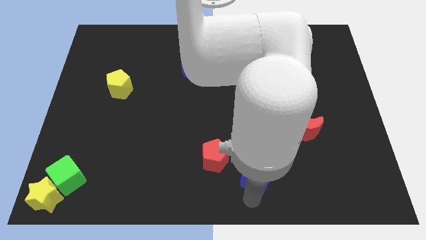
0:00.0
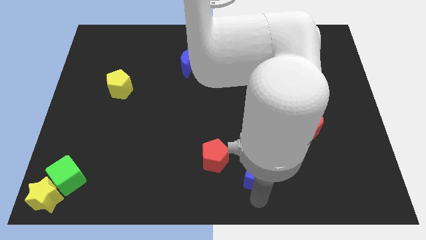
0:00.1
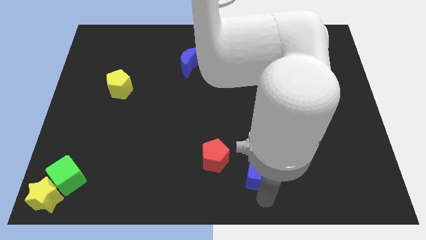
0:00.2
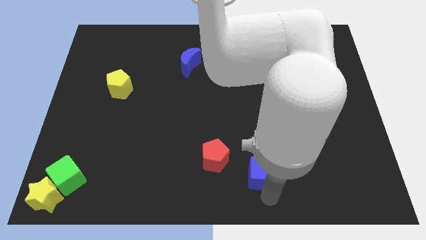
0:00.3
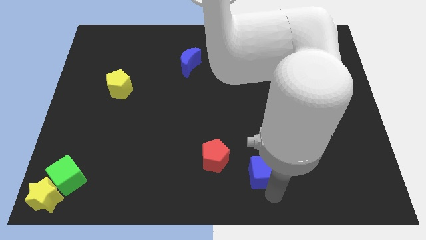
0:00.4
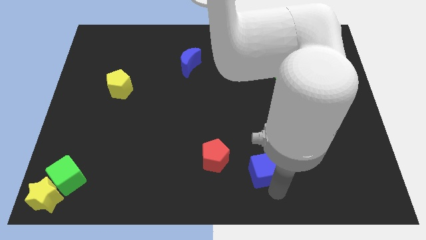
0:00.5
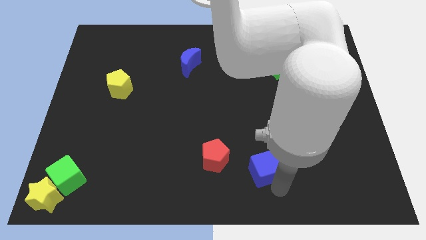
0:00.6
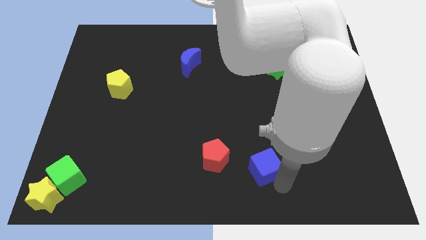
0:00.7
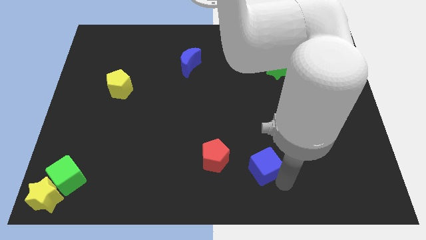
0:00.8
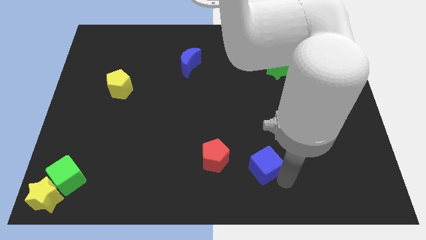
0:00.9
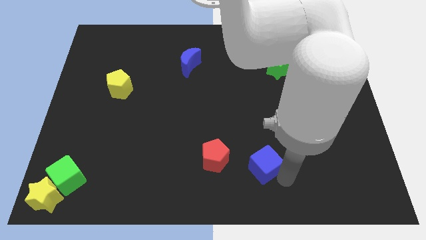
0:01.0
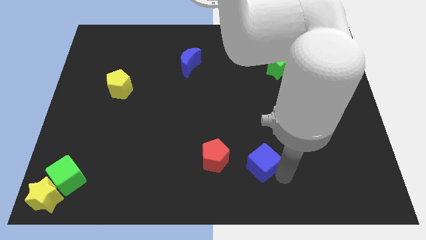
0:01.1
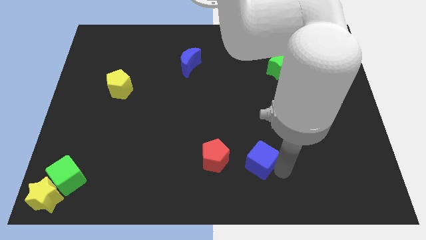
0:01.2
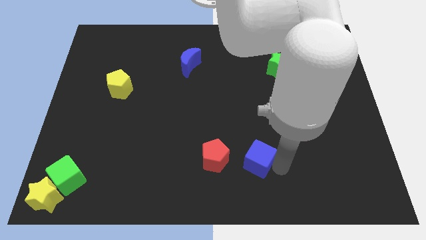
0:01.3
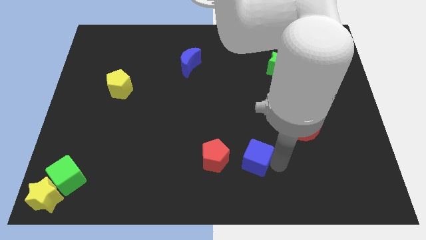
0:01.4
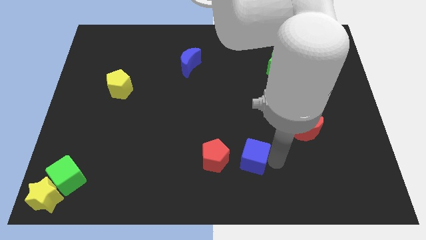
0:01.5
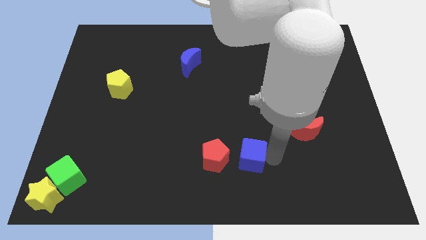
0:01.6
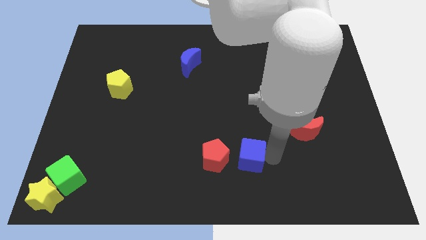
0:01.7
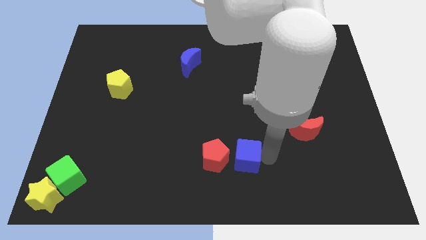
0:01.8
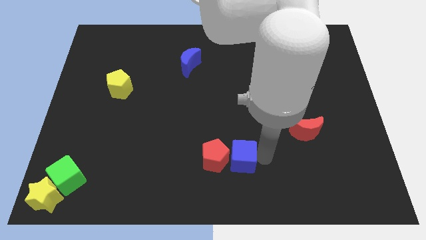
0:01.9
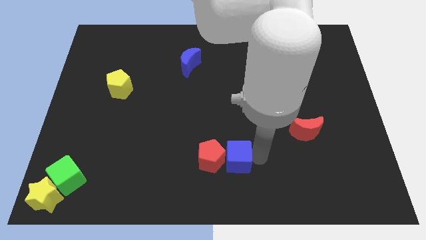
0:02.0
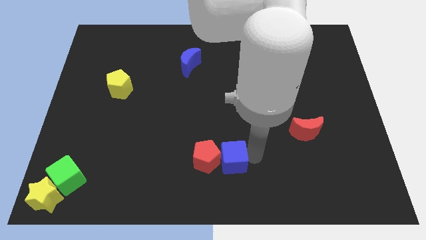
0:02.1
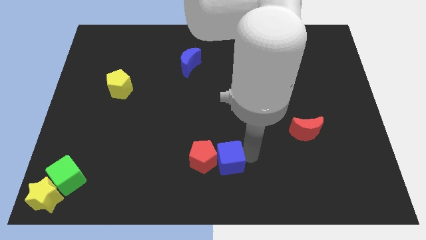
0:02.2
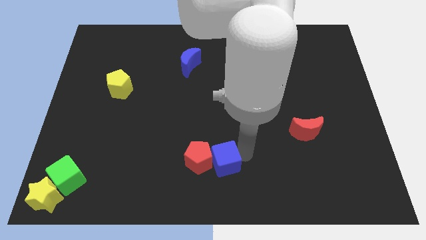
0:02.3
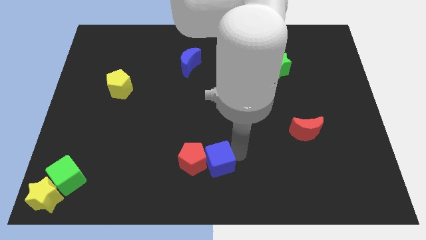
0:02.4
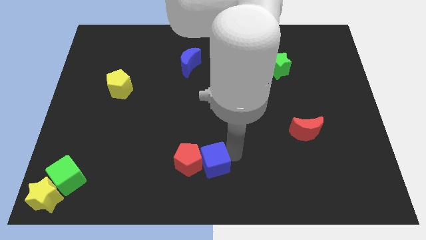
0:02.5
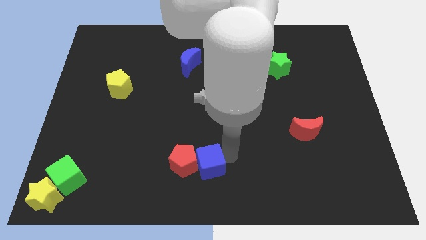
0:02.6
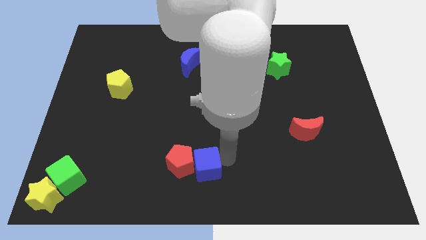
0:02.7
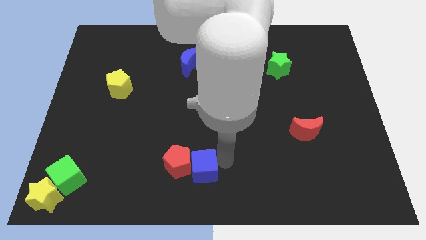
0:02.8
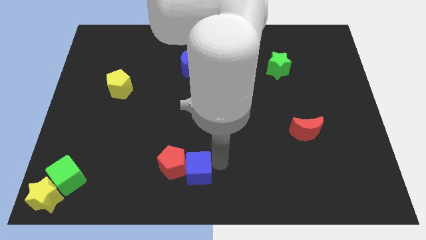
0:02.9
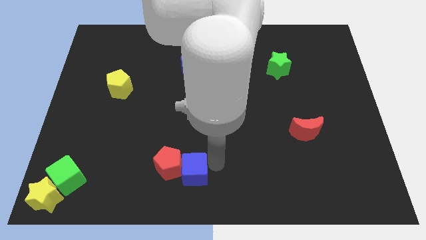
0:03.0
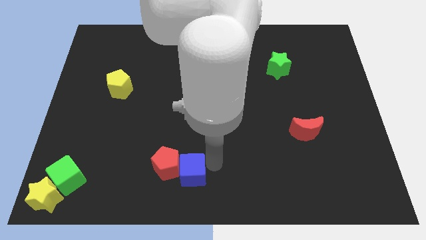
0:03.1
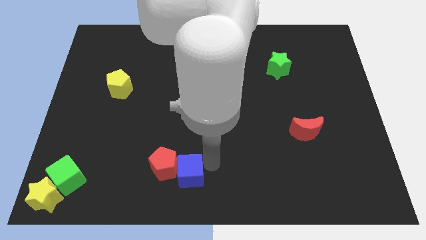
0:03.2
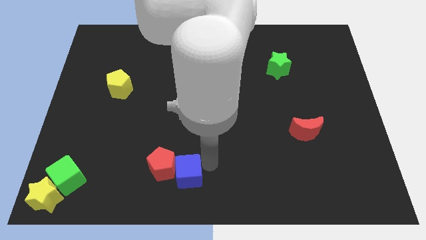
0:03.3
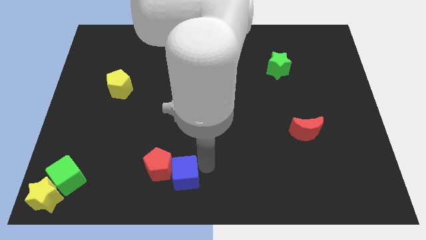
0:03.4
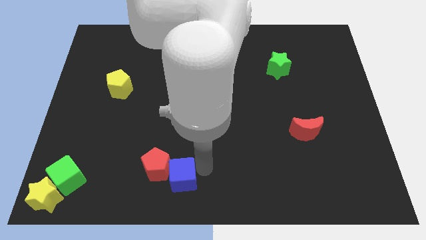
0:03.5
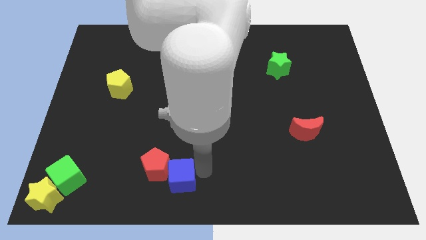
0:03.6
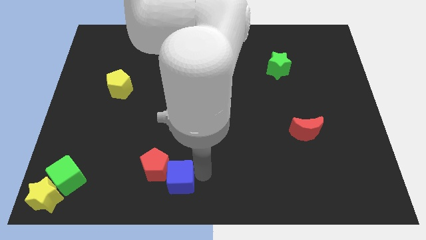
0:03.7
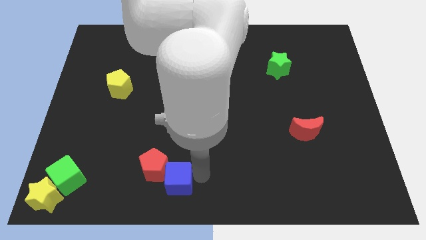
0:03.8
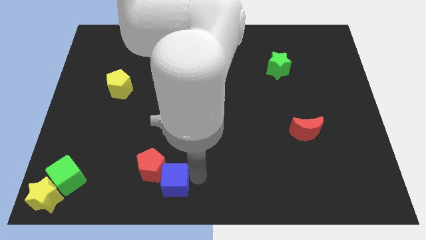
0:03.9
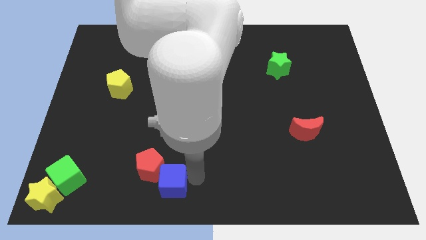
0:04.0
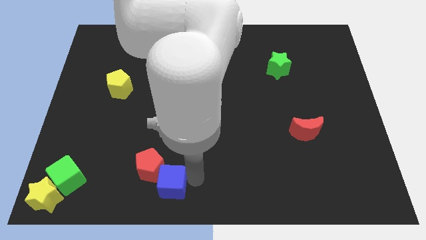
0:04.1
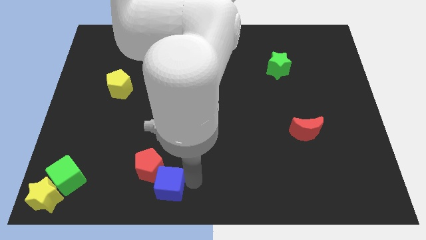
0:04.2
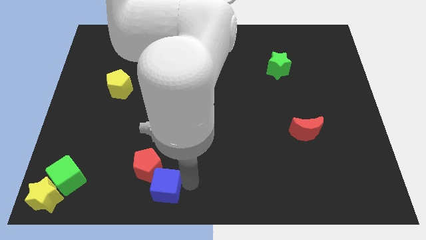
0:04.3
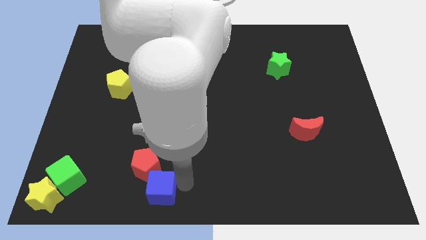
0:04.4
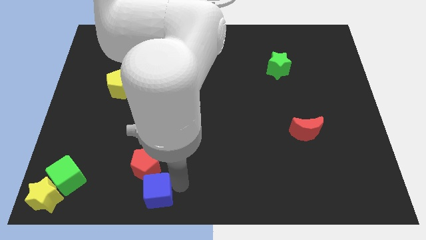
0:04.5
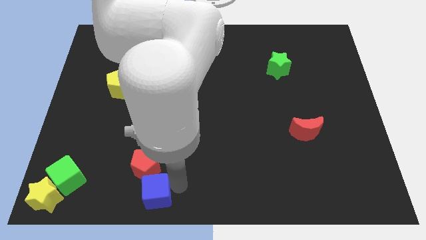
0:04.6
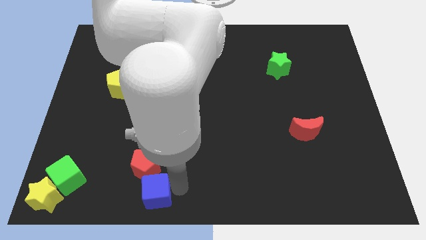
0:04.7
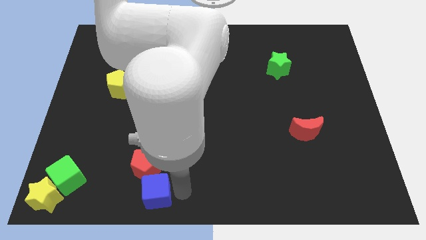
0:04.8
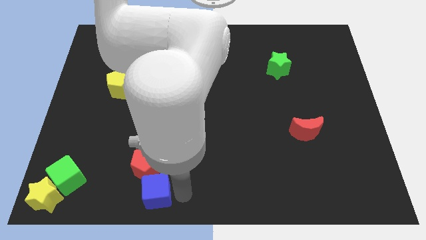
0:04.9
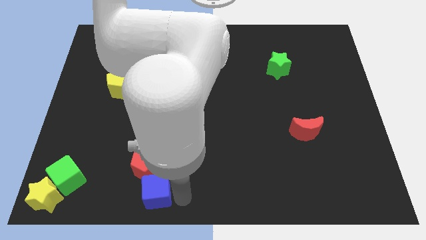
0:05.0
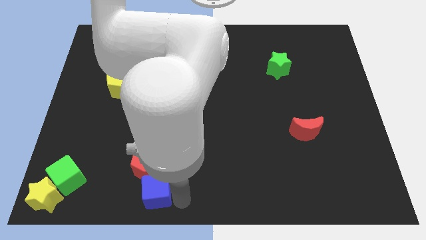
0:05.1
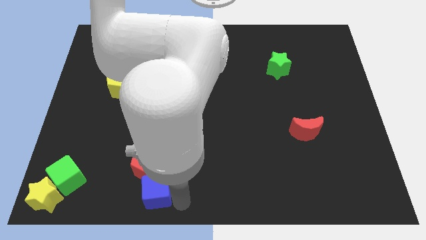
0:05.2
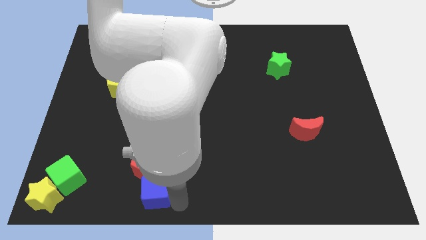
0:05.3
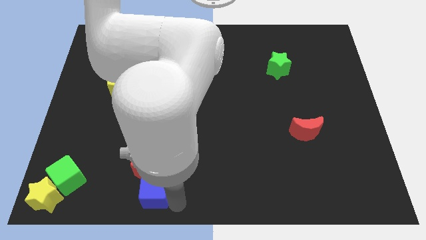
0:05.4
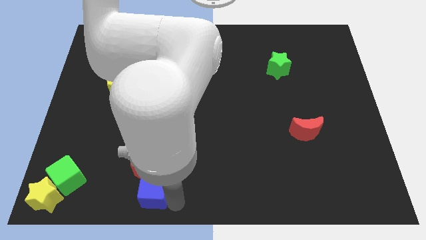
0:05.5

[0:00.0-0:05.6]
move the blue cube and red pentagon slightly towards the left side of the board

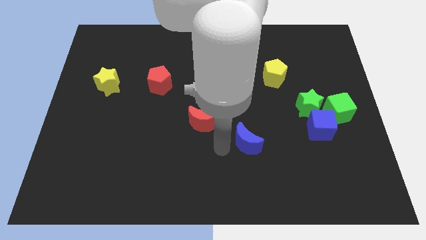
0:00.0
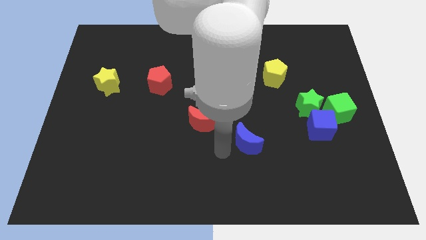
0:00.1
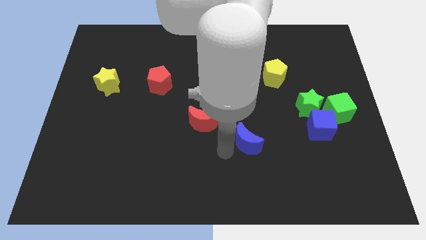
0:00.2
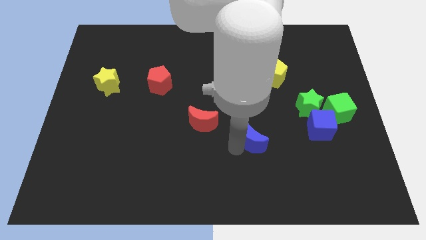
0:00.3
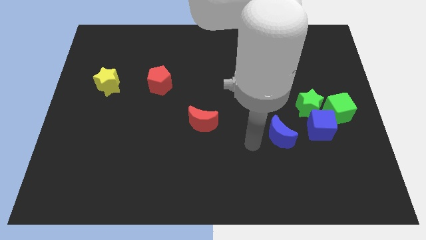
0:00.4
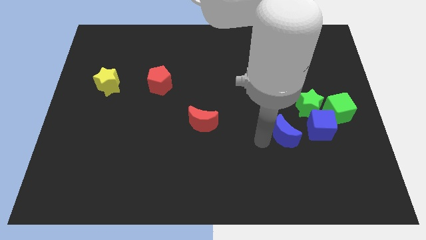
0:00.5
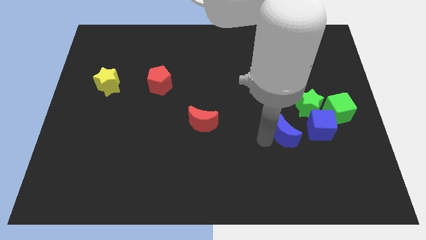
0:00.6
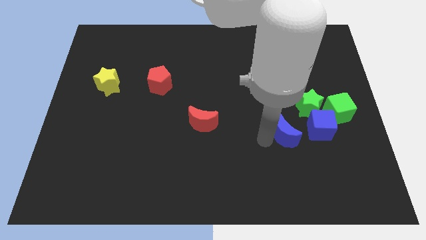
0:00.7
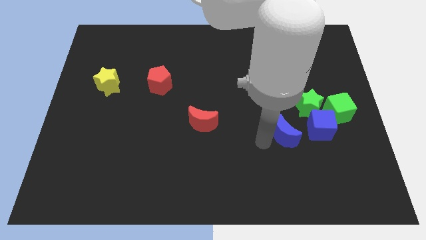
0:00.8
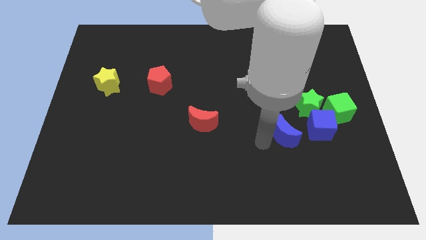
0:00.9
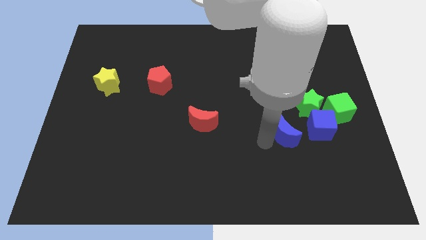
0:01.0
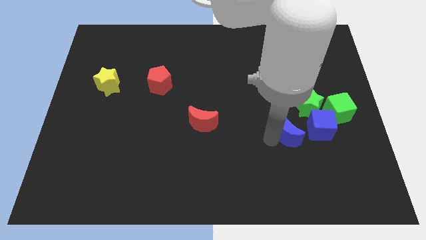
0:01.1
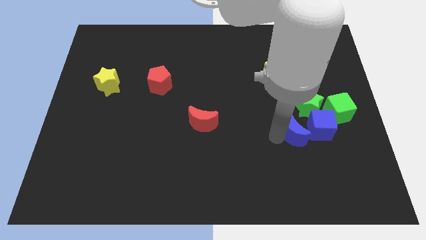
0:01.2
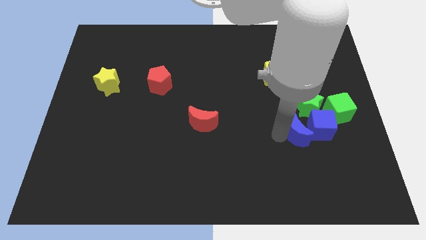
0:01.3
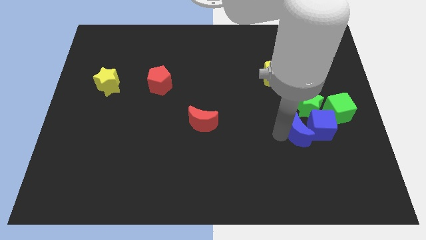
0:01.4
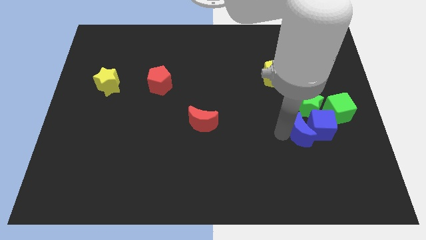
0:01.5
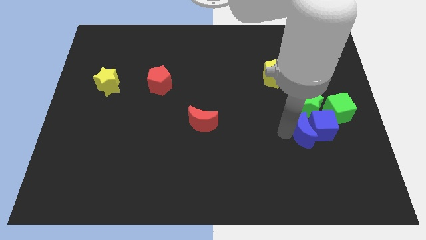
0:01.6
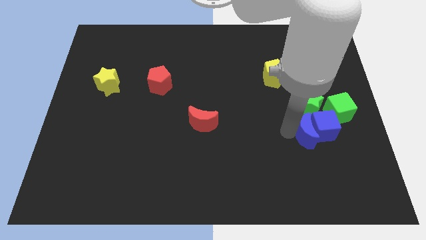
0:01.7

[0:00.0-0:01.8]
place the blue moon left to the blue cube

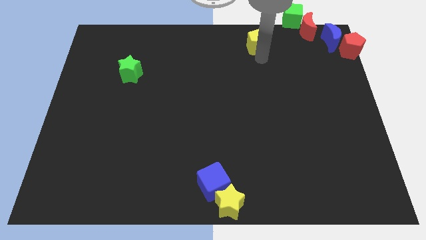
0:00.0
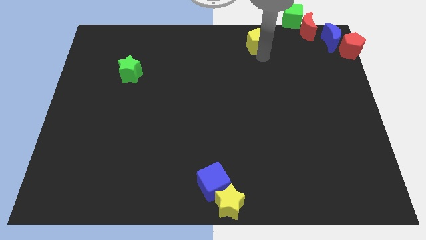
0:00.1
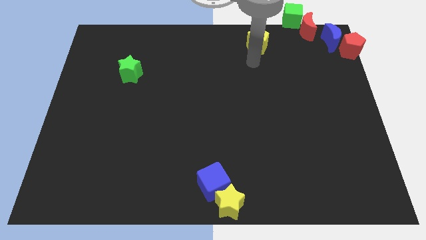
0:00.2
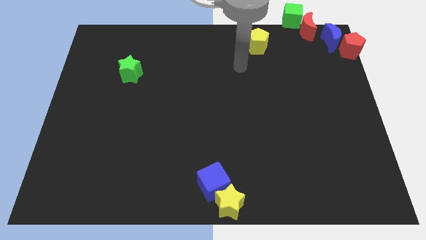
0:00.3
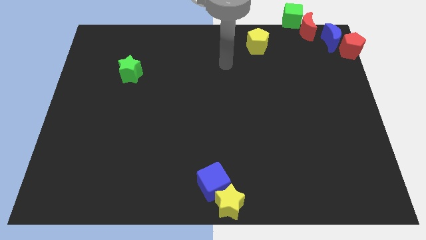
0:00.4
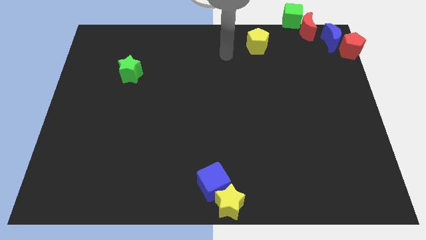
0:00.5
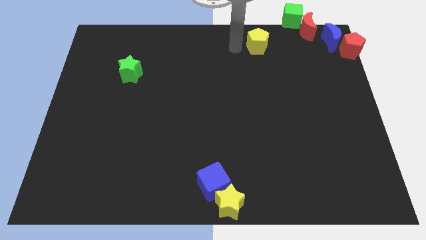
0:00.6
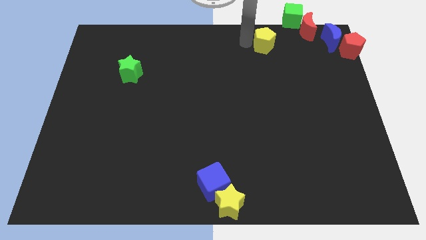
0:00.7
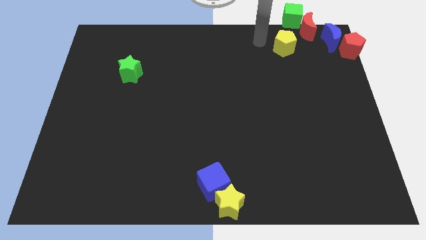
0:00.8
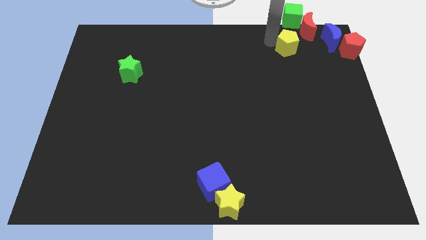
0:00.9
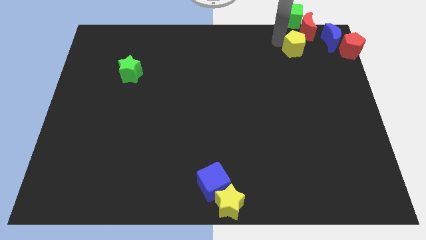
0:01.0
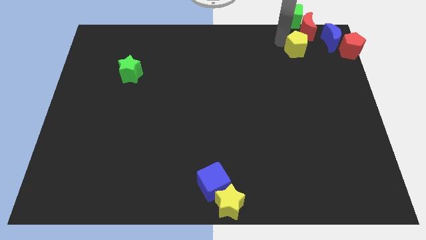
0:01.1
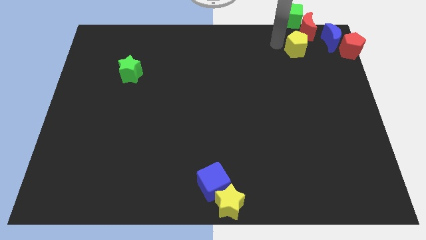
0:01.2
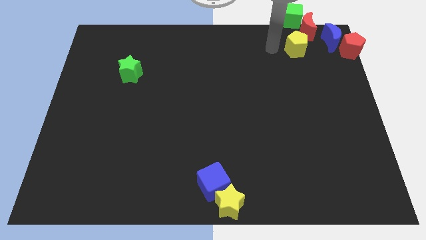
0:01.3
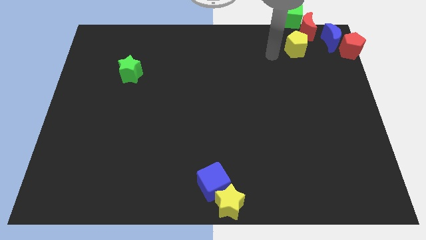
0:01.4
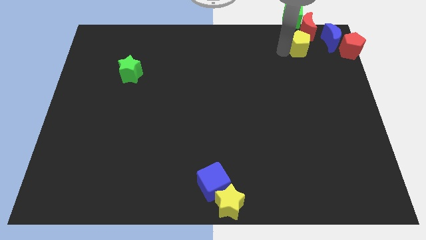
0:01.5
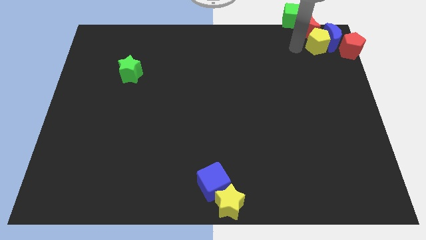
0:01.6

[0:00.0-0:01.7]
push the yellow pentagon into the blue crescent
